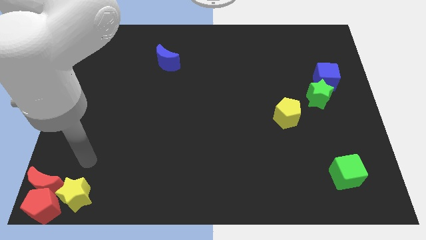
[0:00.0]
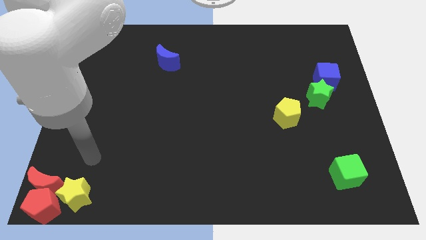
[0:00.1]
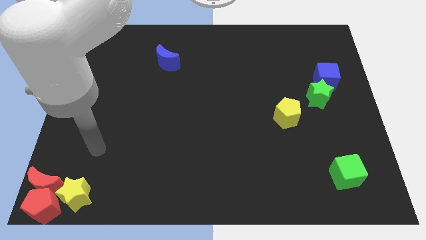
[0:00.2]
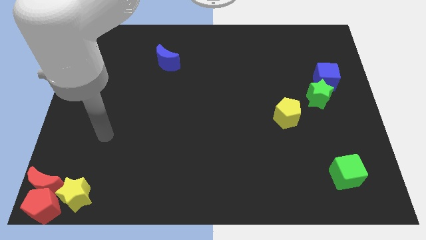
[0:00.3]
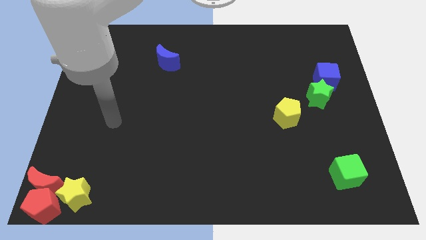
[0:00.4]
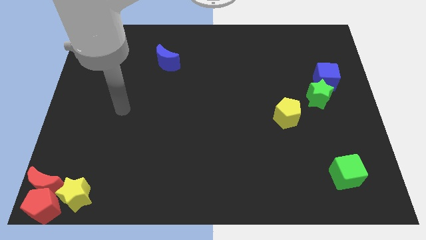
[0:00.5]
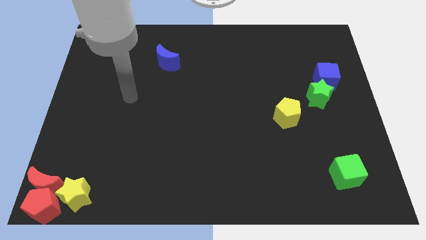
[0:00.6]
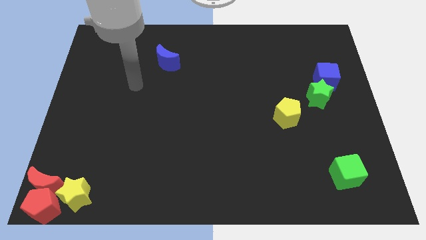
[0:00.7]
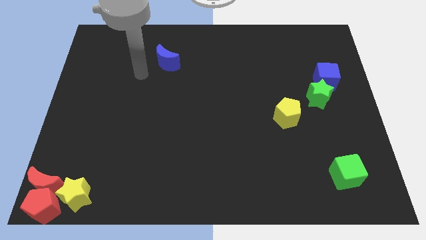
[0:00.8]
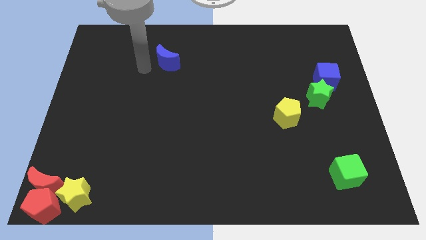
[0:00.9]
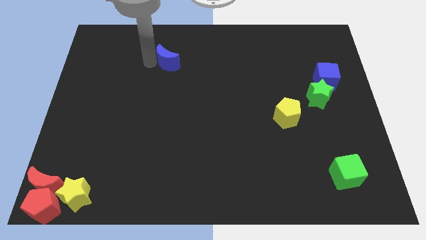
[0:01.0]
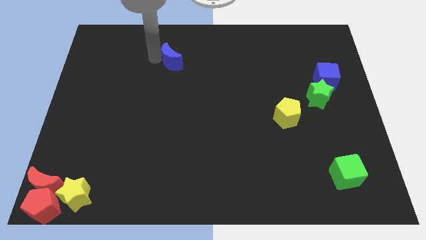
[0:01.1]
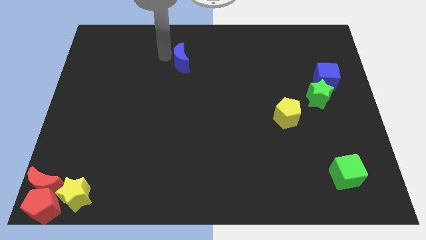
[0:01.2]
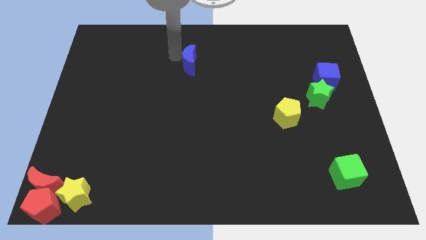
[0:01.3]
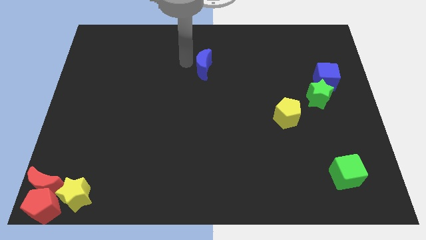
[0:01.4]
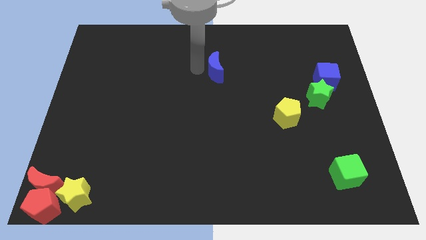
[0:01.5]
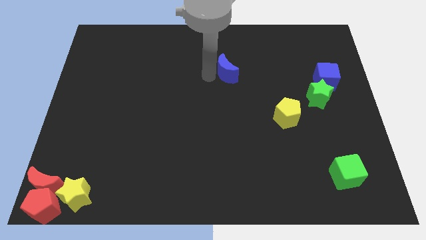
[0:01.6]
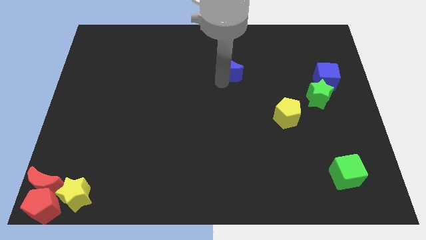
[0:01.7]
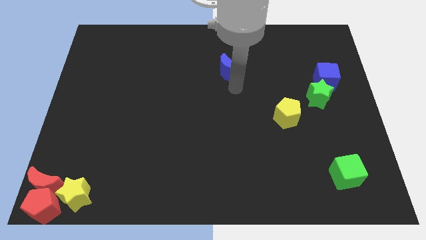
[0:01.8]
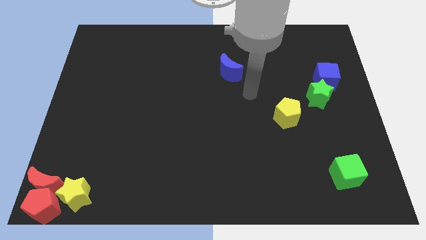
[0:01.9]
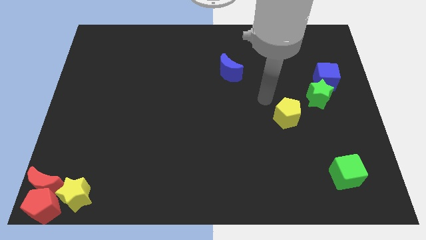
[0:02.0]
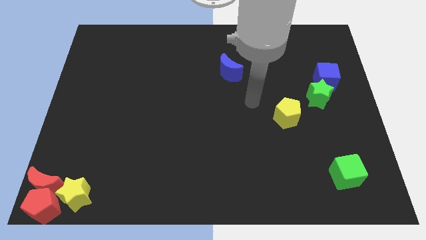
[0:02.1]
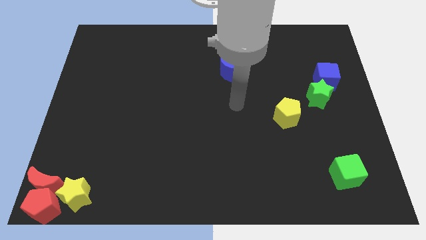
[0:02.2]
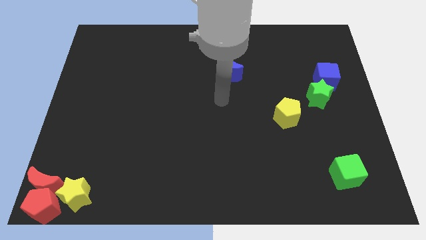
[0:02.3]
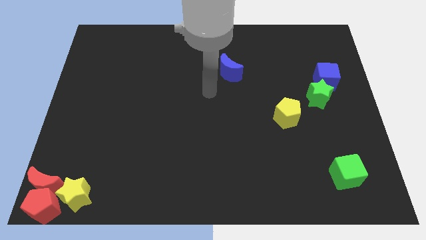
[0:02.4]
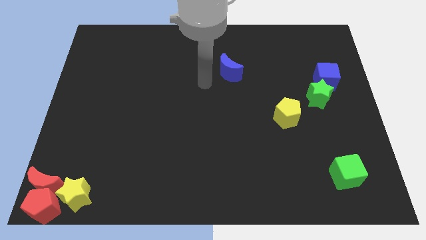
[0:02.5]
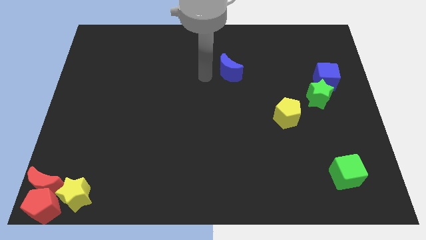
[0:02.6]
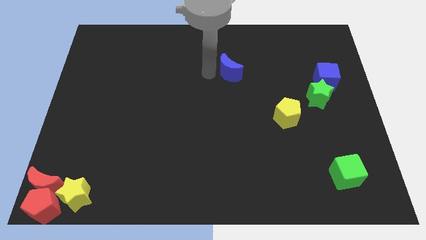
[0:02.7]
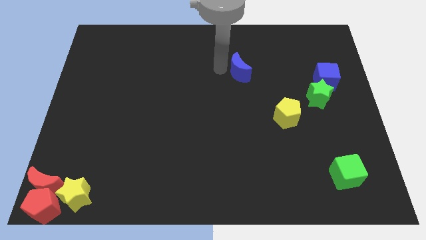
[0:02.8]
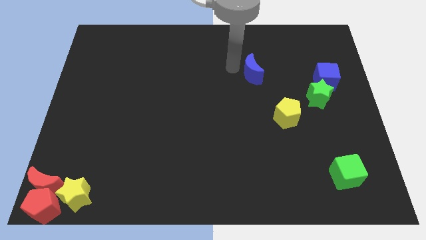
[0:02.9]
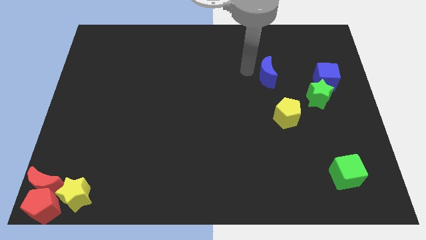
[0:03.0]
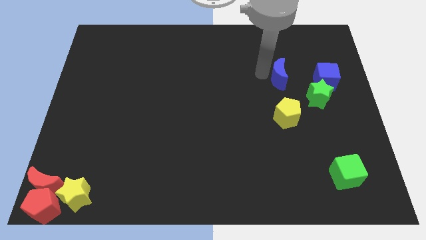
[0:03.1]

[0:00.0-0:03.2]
push blue crescent above yellow pentagon

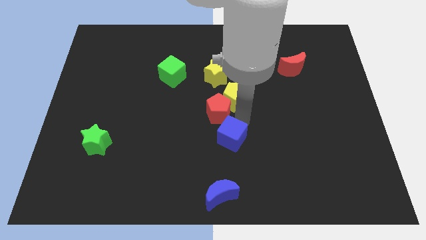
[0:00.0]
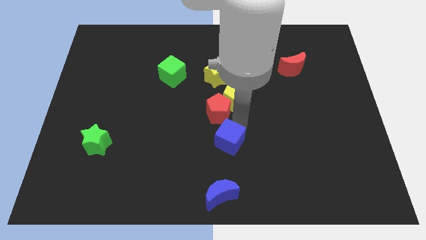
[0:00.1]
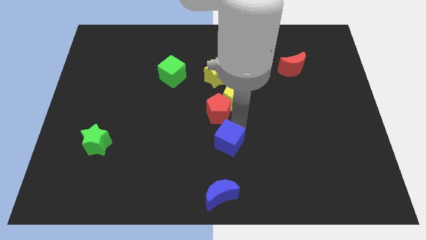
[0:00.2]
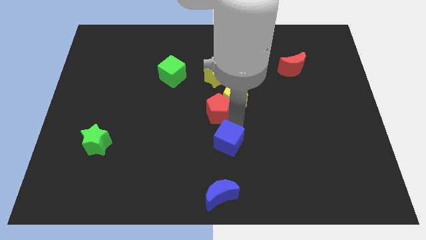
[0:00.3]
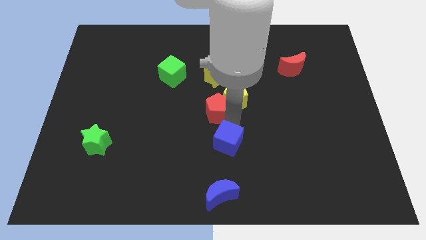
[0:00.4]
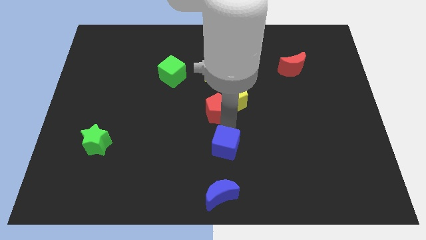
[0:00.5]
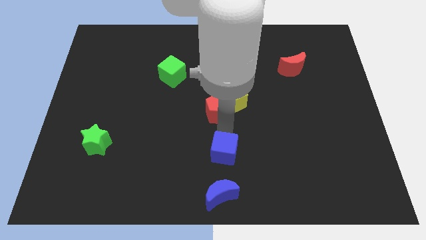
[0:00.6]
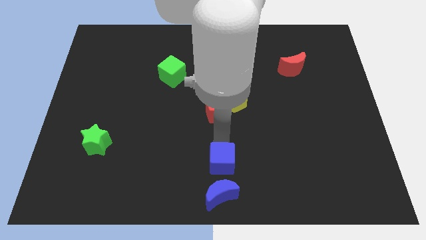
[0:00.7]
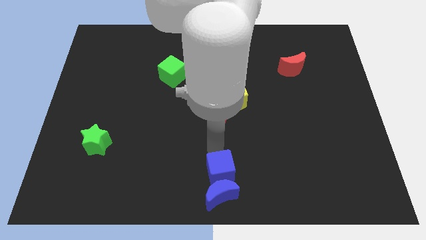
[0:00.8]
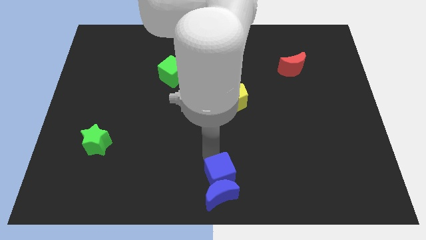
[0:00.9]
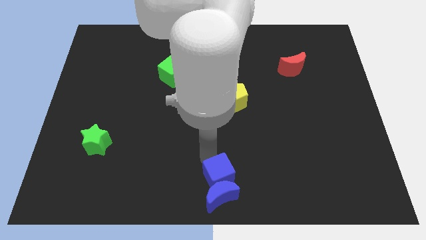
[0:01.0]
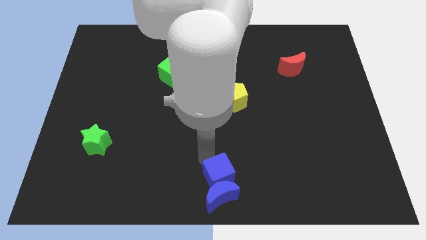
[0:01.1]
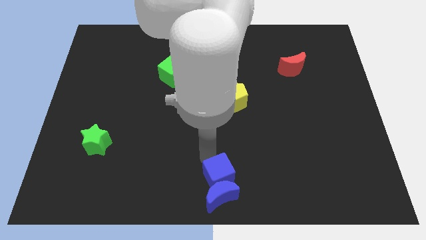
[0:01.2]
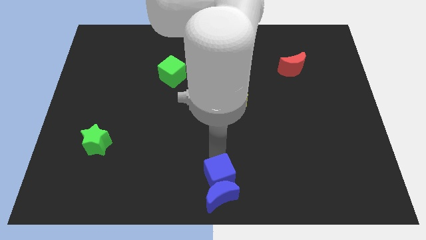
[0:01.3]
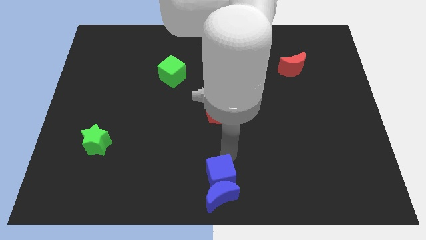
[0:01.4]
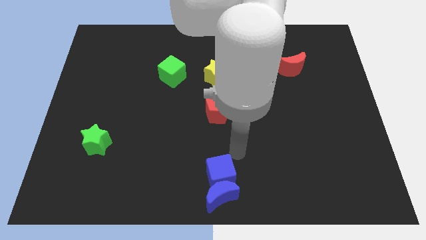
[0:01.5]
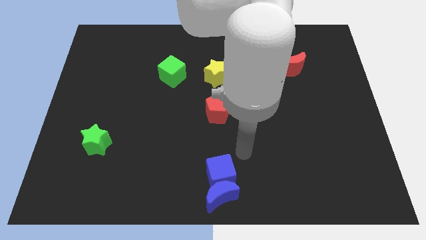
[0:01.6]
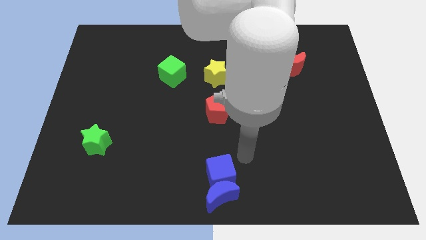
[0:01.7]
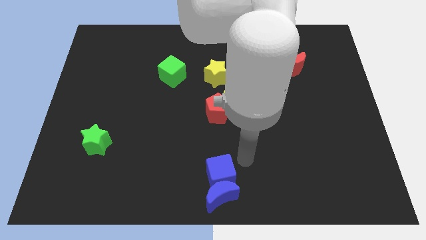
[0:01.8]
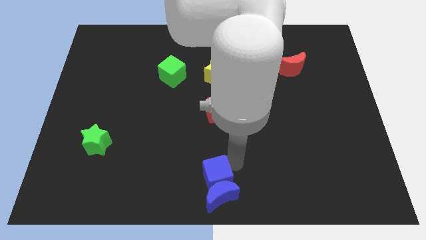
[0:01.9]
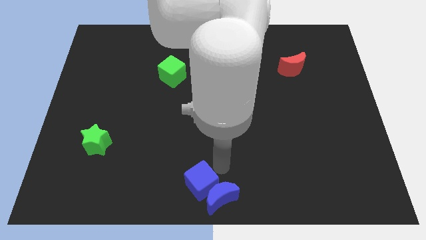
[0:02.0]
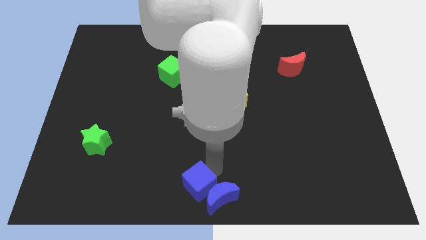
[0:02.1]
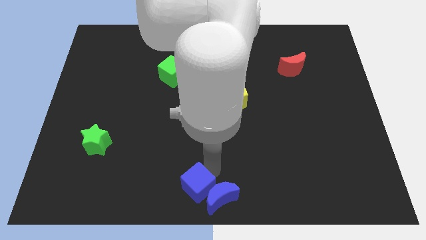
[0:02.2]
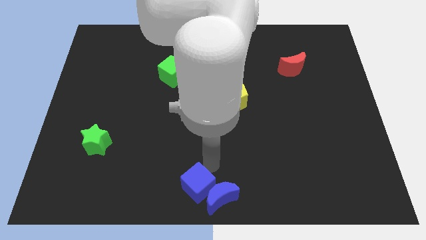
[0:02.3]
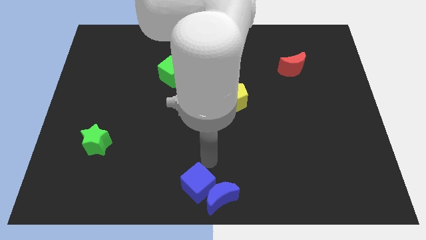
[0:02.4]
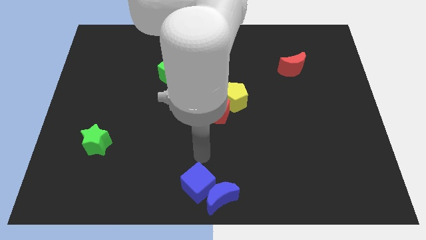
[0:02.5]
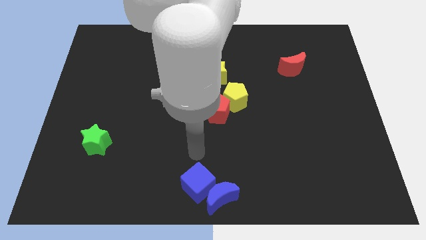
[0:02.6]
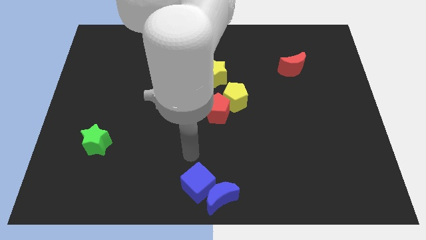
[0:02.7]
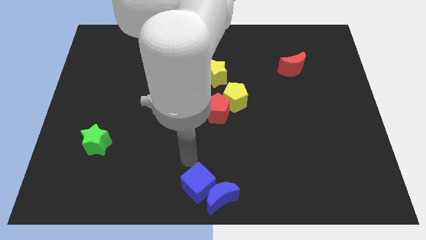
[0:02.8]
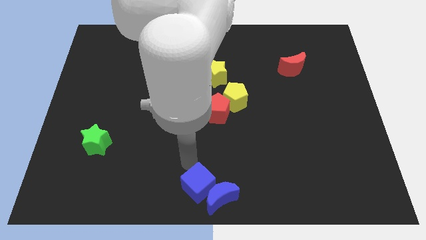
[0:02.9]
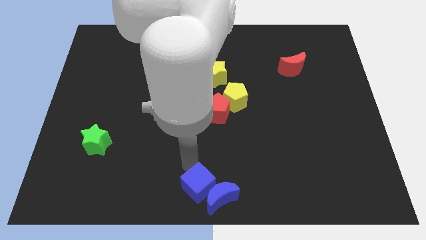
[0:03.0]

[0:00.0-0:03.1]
place the blue cube close to blue crescent

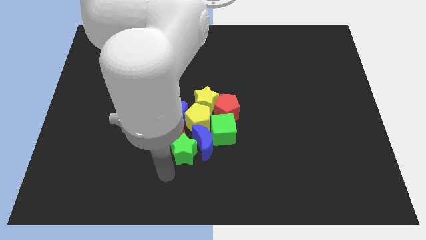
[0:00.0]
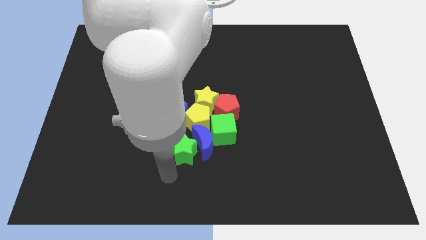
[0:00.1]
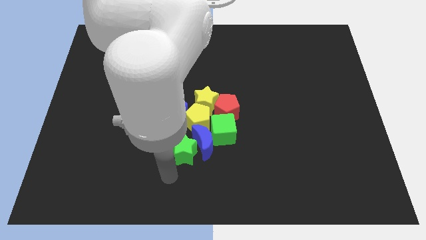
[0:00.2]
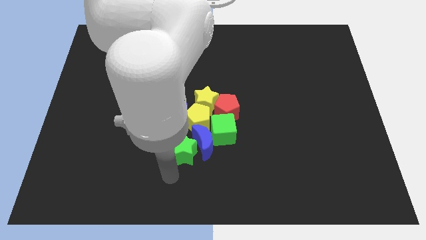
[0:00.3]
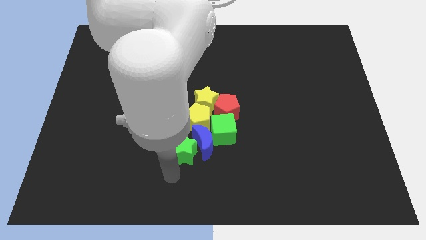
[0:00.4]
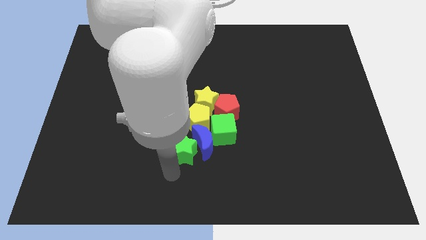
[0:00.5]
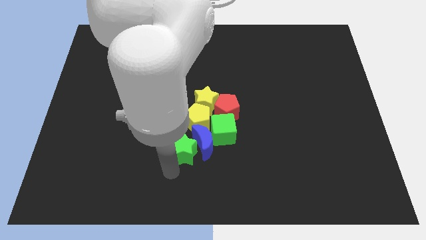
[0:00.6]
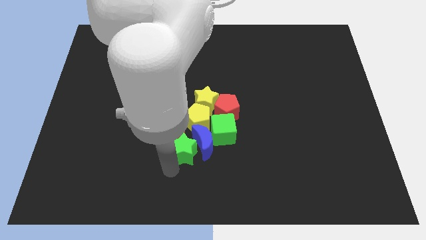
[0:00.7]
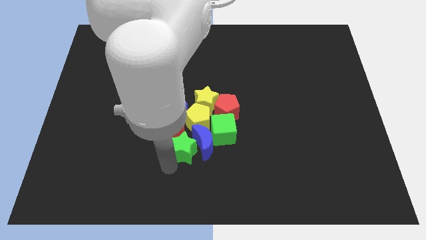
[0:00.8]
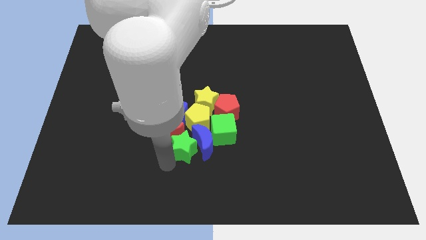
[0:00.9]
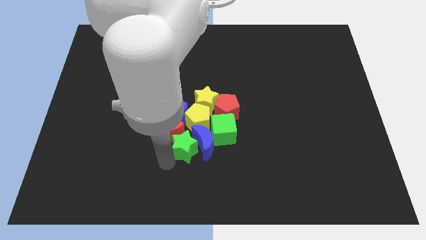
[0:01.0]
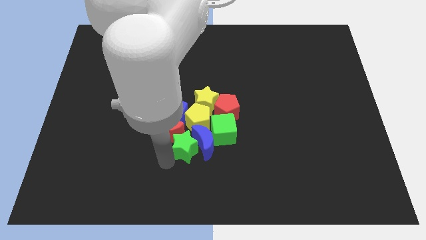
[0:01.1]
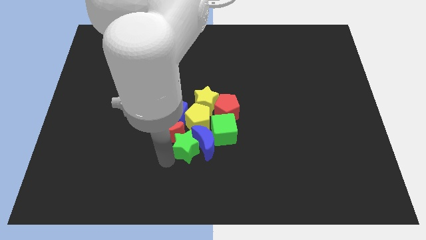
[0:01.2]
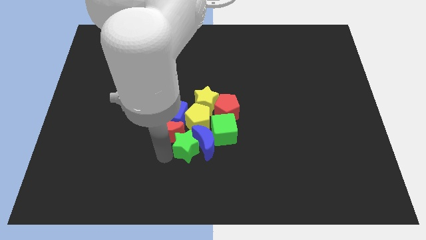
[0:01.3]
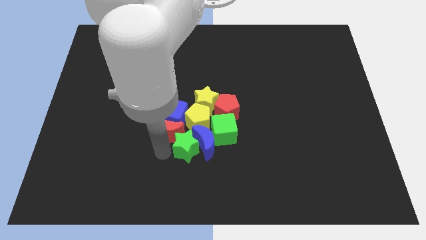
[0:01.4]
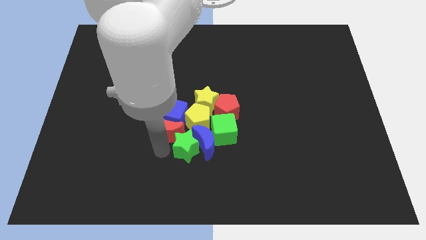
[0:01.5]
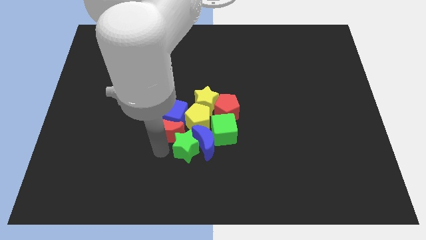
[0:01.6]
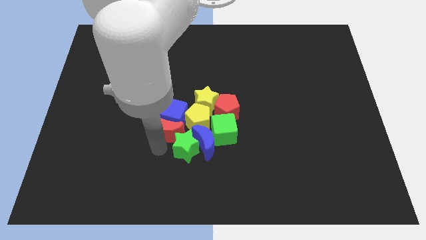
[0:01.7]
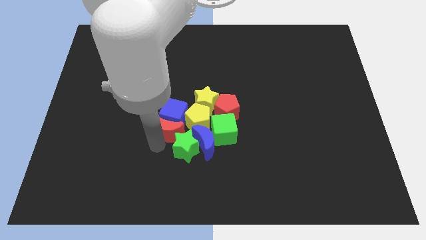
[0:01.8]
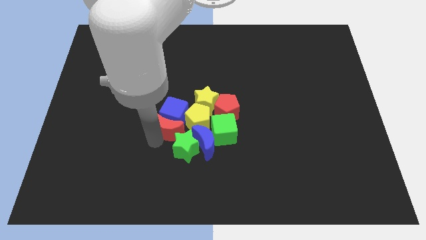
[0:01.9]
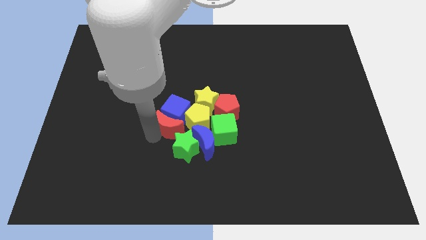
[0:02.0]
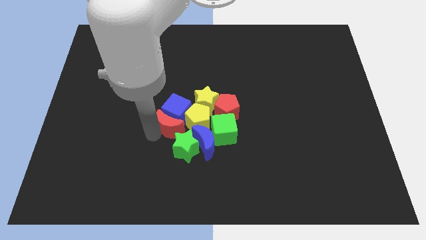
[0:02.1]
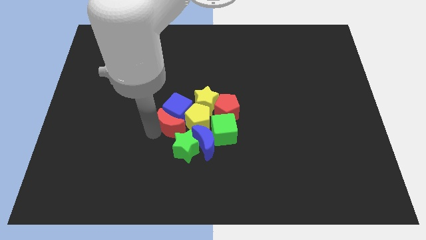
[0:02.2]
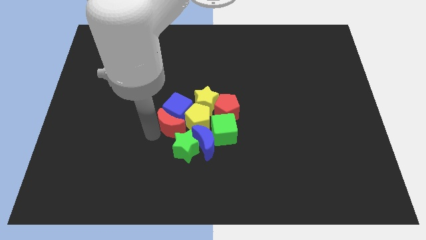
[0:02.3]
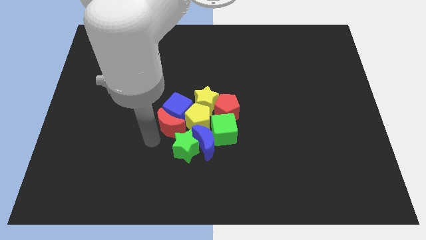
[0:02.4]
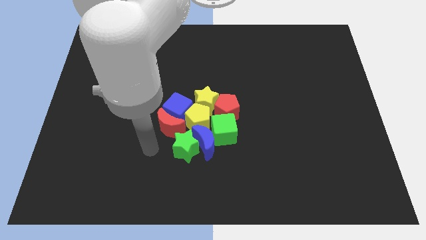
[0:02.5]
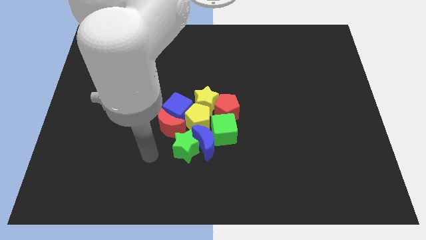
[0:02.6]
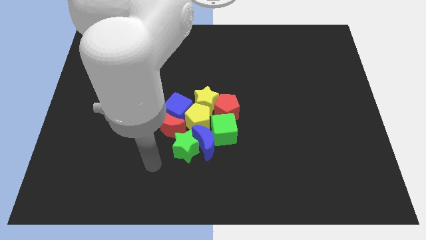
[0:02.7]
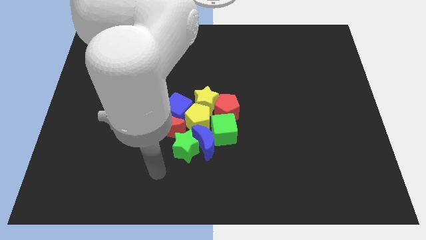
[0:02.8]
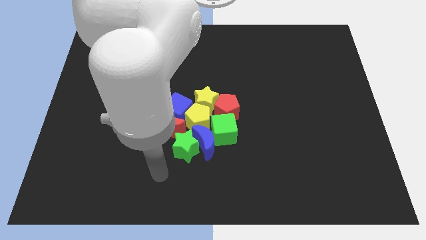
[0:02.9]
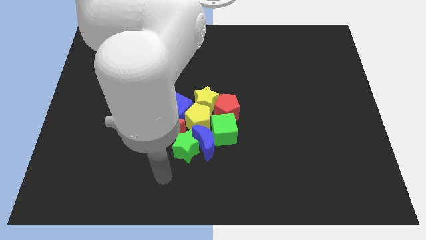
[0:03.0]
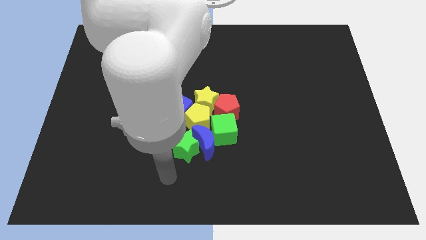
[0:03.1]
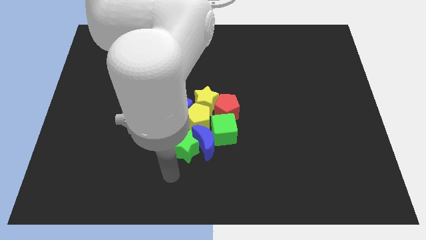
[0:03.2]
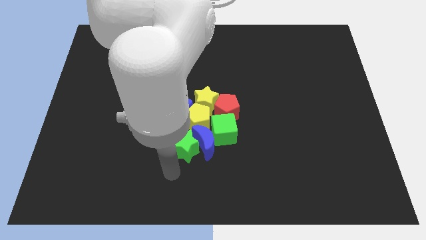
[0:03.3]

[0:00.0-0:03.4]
push the blue cube to the top left of the yellow pentagon
